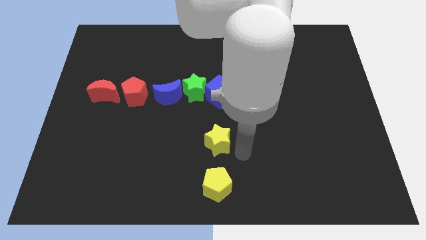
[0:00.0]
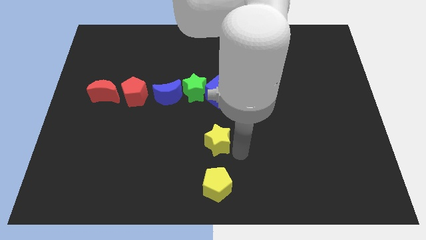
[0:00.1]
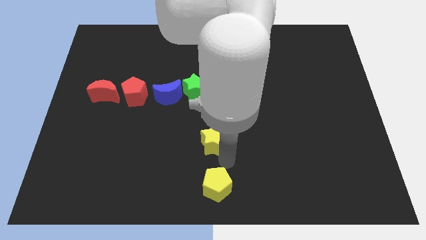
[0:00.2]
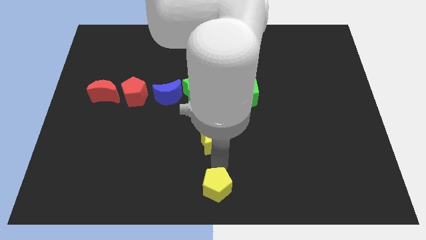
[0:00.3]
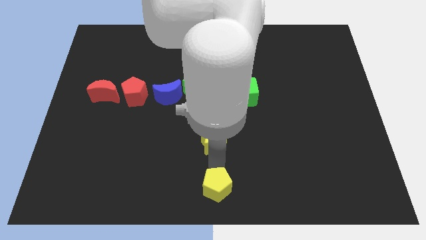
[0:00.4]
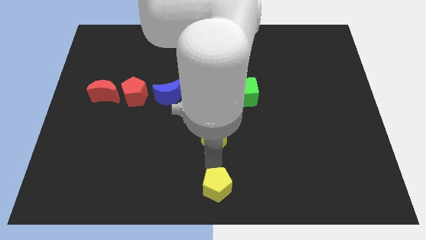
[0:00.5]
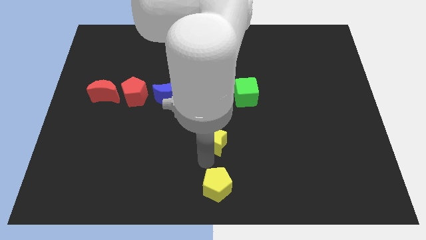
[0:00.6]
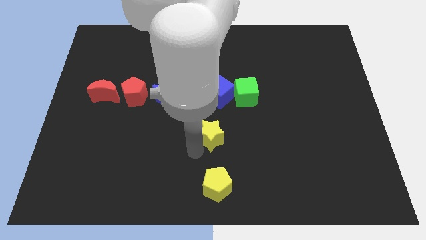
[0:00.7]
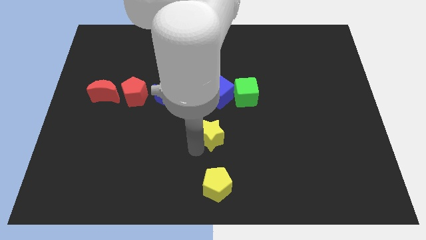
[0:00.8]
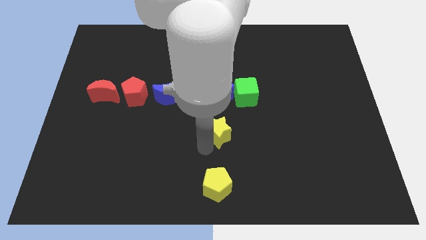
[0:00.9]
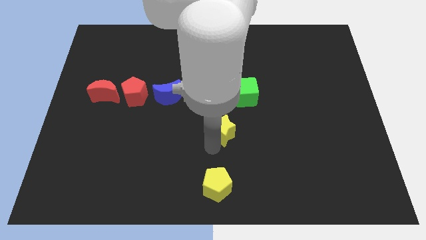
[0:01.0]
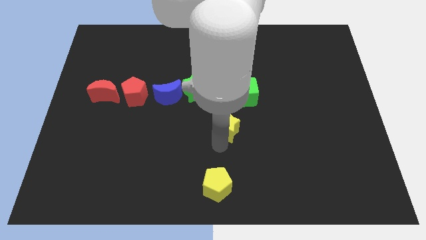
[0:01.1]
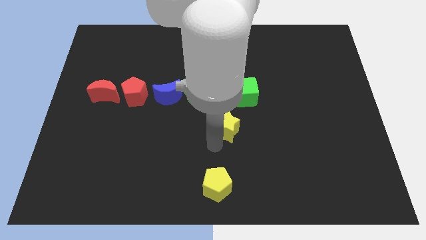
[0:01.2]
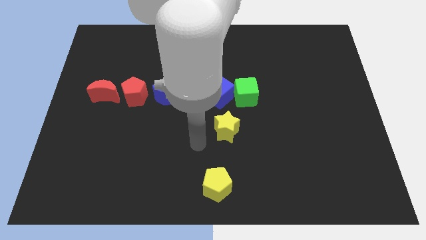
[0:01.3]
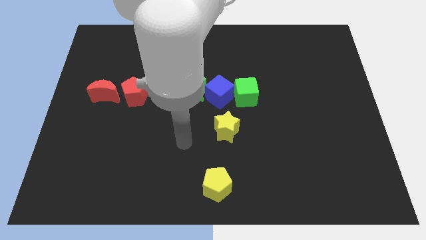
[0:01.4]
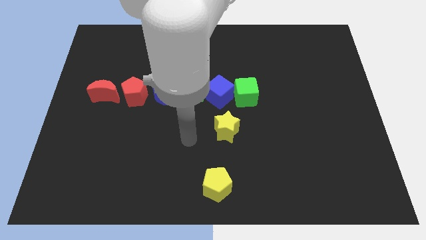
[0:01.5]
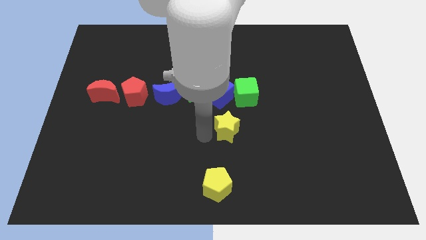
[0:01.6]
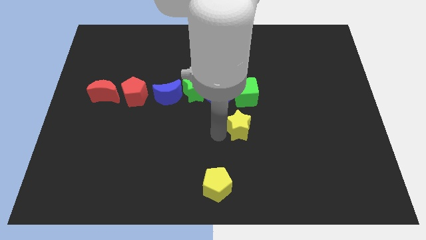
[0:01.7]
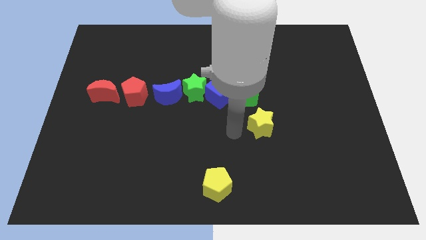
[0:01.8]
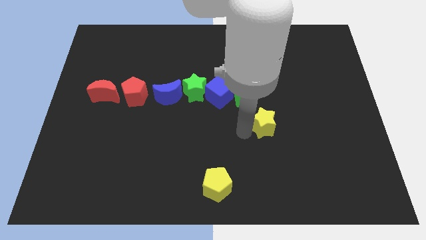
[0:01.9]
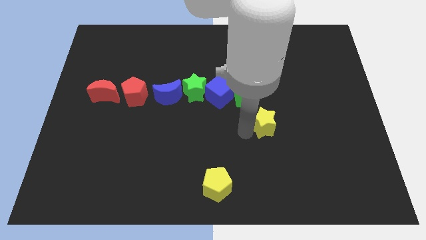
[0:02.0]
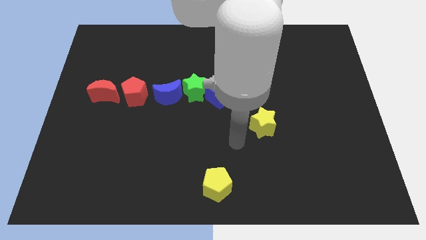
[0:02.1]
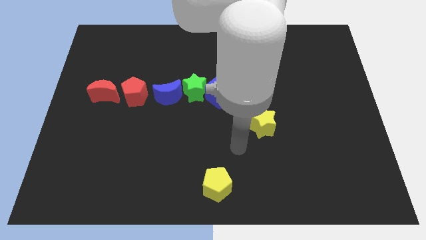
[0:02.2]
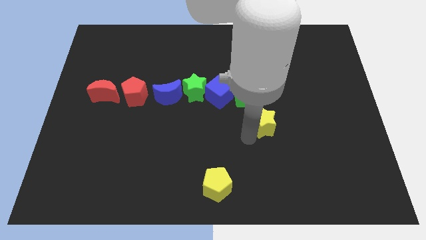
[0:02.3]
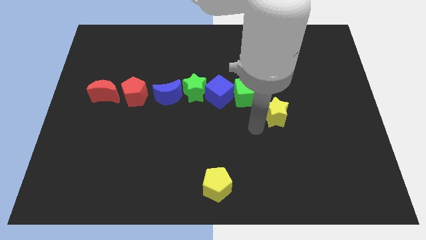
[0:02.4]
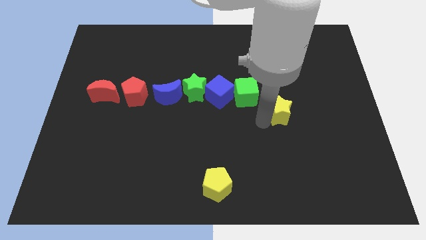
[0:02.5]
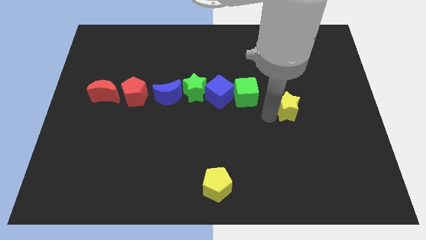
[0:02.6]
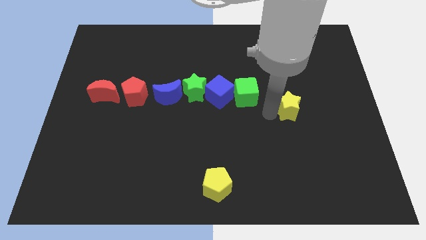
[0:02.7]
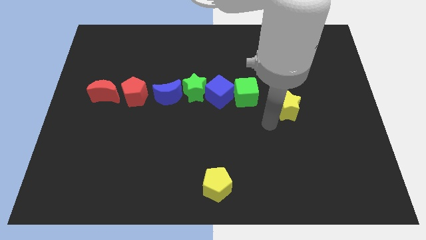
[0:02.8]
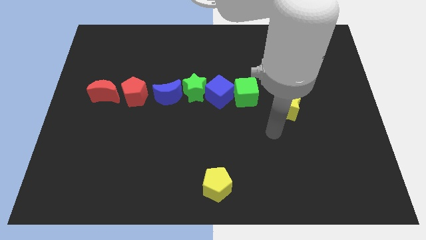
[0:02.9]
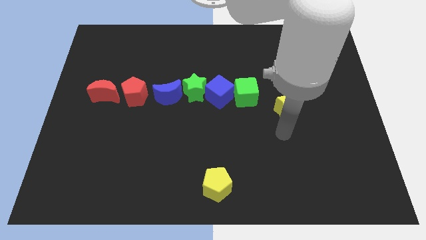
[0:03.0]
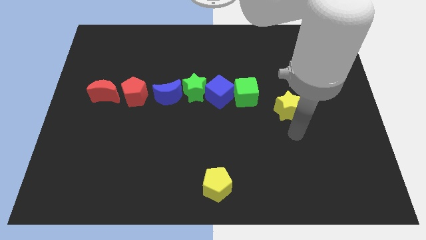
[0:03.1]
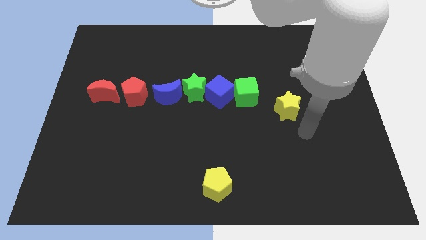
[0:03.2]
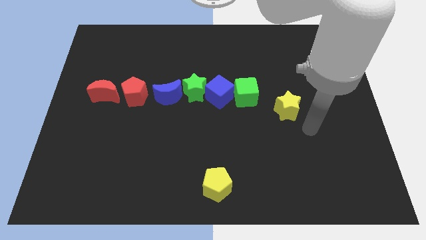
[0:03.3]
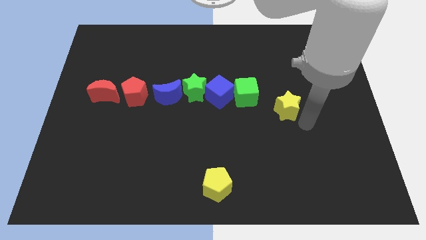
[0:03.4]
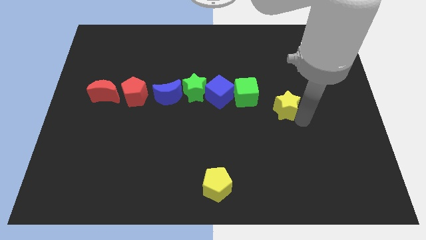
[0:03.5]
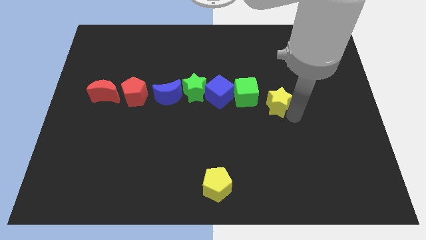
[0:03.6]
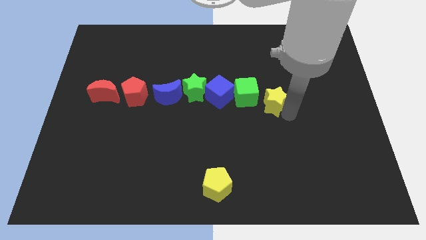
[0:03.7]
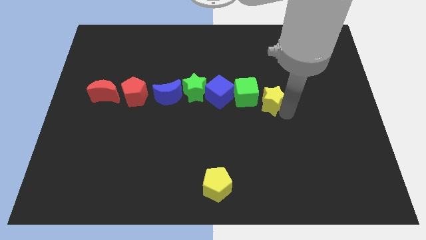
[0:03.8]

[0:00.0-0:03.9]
push yellow star to the right of the green cube

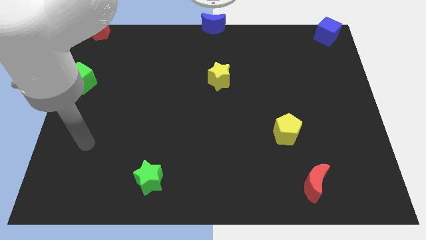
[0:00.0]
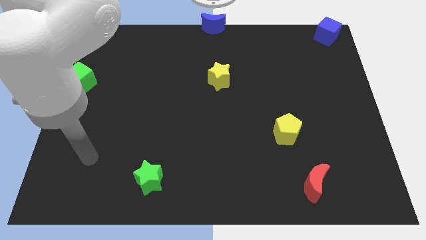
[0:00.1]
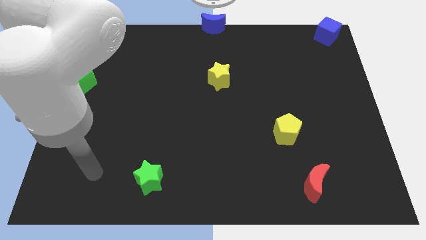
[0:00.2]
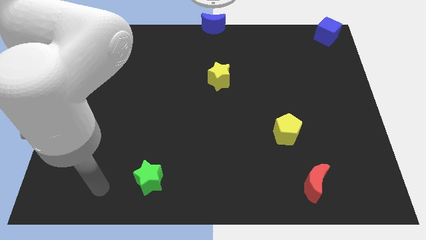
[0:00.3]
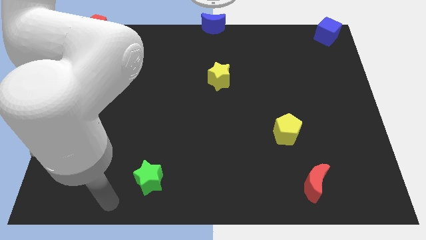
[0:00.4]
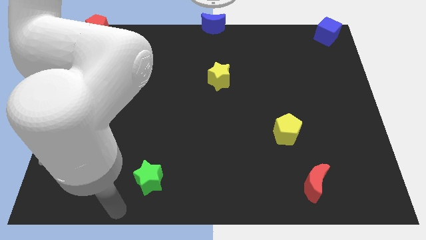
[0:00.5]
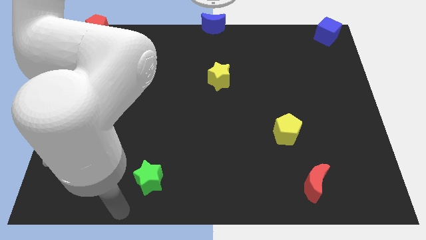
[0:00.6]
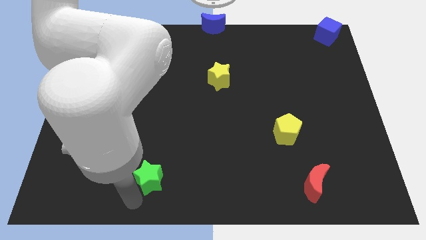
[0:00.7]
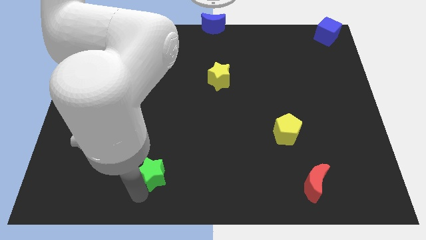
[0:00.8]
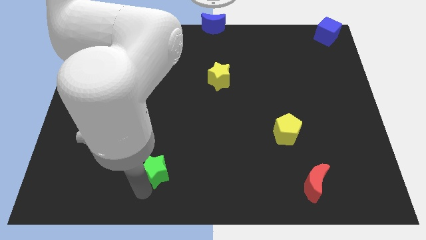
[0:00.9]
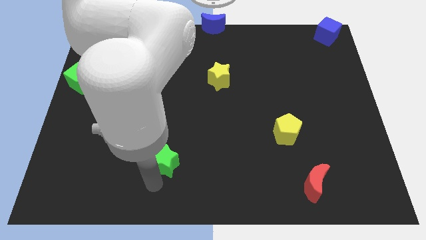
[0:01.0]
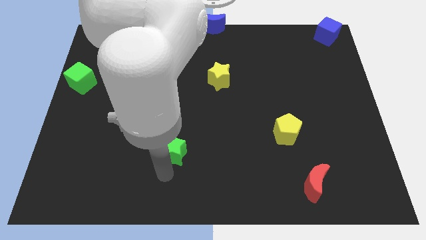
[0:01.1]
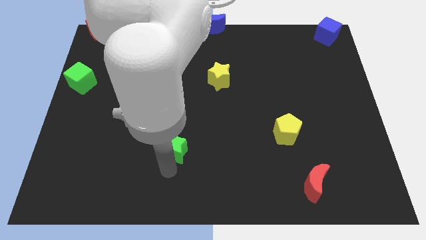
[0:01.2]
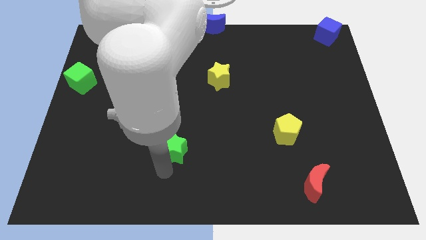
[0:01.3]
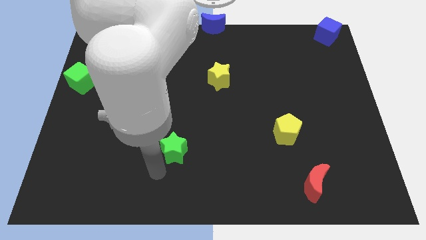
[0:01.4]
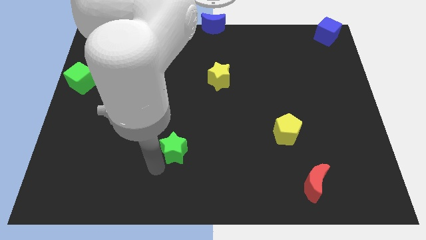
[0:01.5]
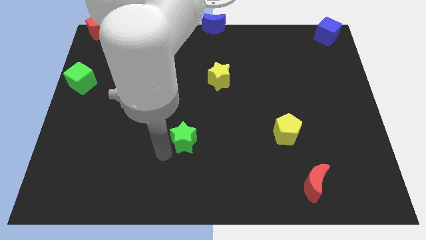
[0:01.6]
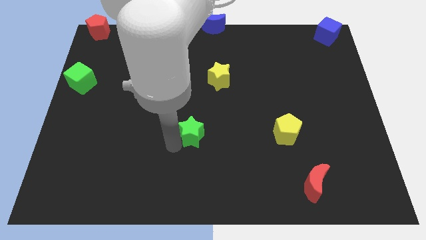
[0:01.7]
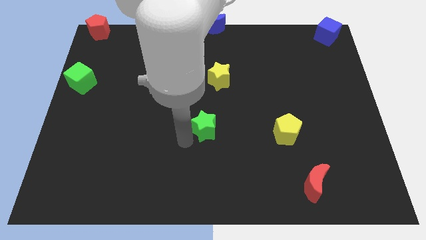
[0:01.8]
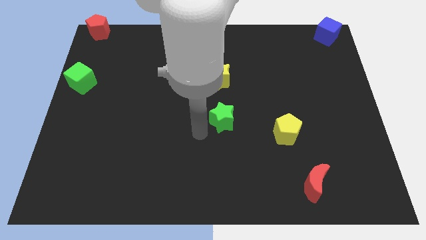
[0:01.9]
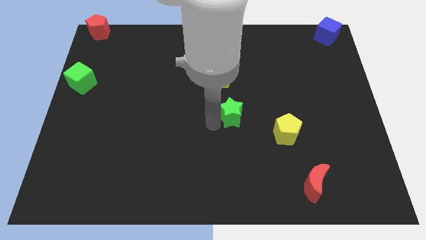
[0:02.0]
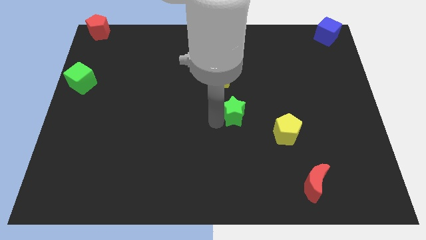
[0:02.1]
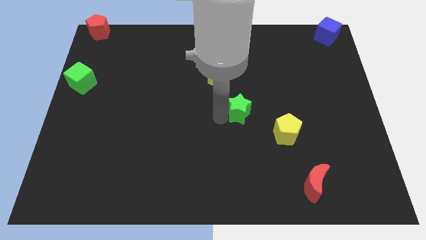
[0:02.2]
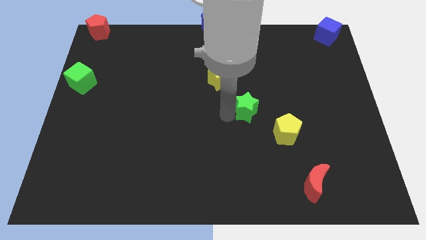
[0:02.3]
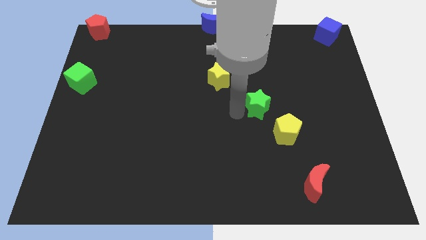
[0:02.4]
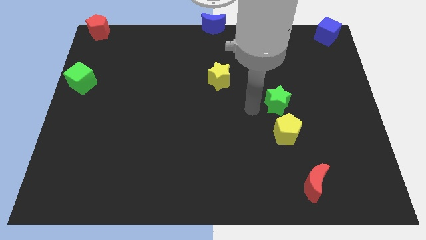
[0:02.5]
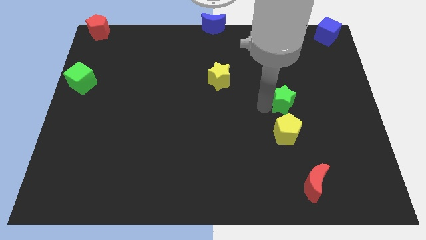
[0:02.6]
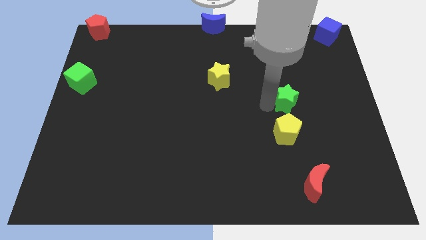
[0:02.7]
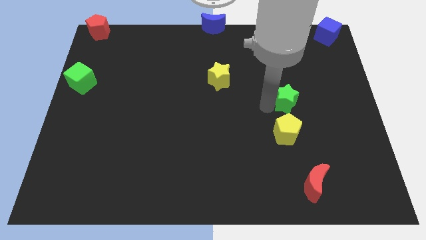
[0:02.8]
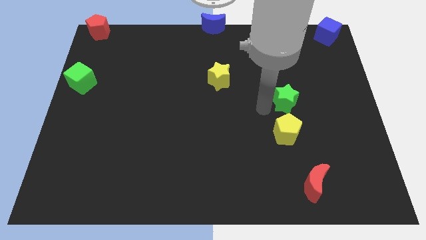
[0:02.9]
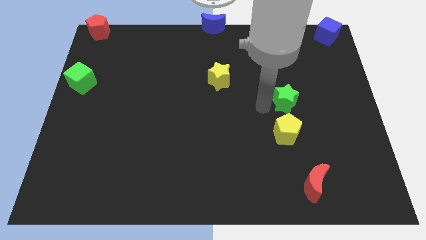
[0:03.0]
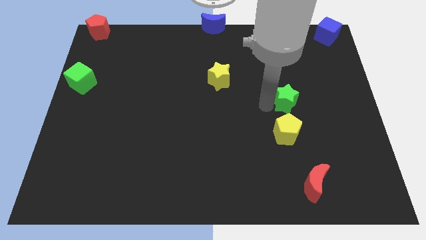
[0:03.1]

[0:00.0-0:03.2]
drag the green star to the top side of the yellow pentagon

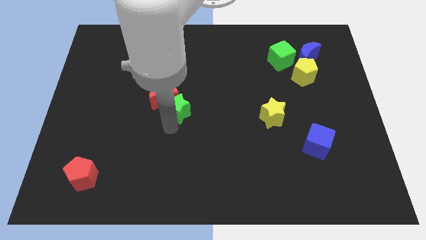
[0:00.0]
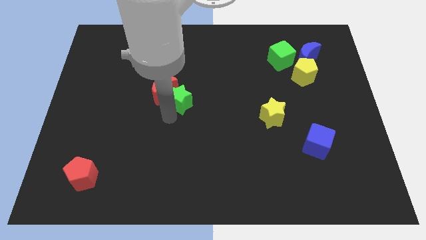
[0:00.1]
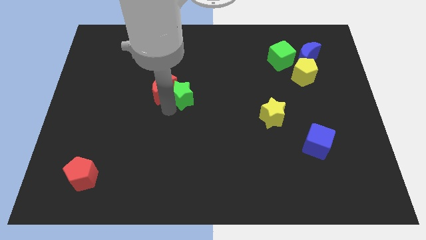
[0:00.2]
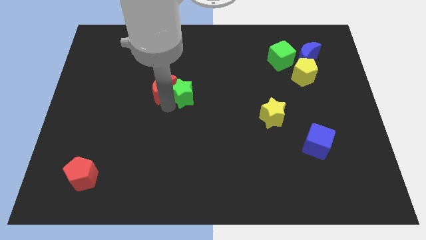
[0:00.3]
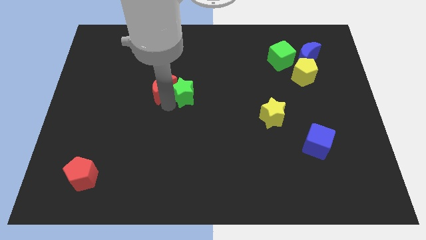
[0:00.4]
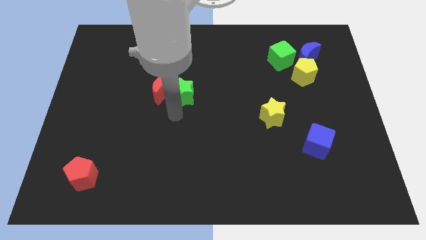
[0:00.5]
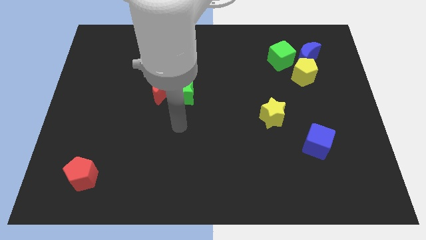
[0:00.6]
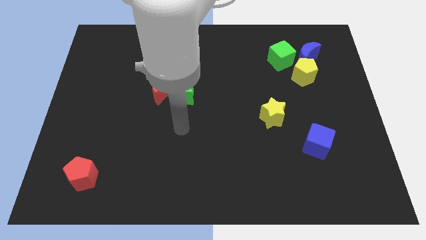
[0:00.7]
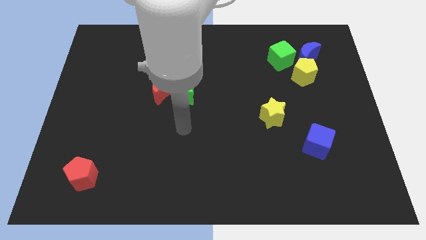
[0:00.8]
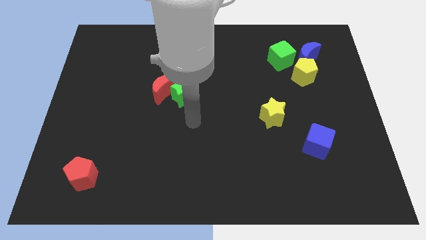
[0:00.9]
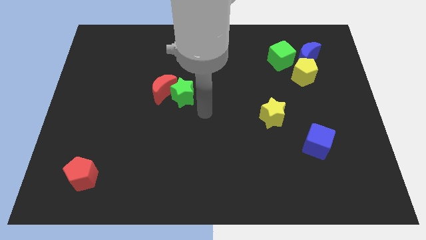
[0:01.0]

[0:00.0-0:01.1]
place the green star right to the red crescent

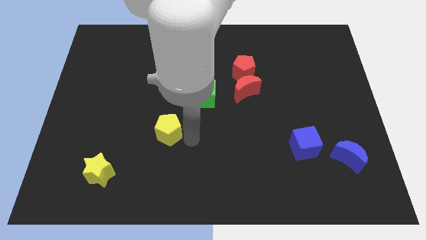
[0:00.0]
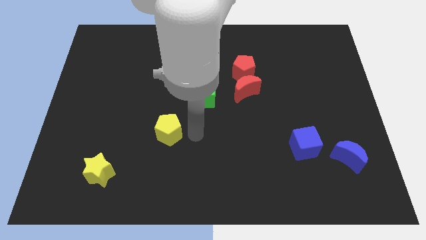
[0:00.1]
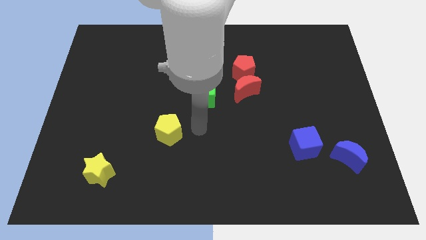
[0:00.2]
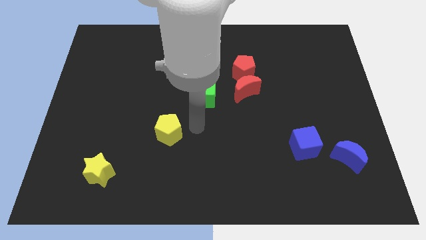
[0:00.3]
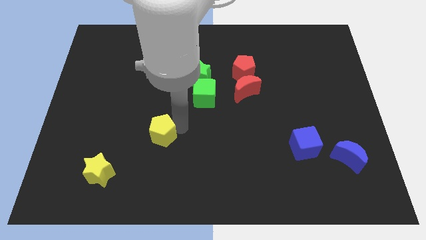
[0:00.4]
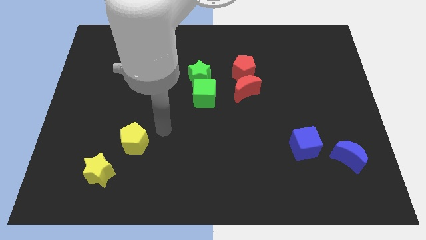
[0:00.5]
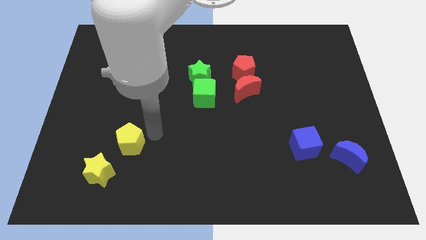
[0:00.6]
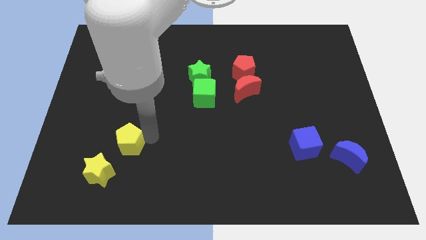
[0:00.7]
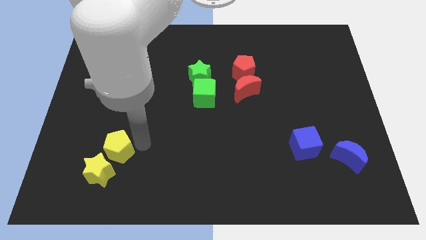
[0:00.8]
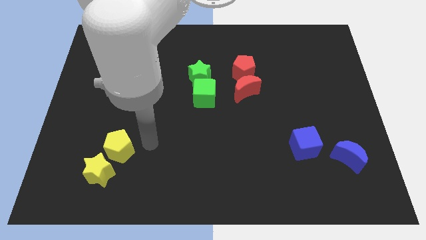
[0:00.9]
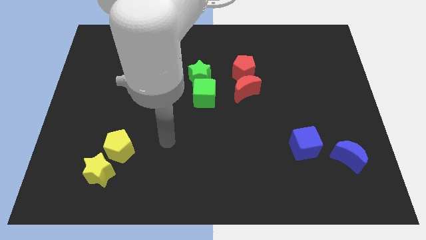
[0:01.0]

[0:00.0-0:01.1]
move the yellow pentagon towards yellow star
